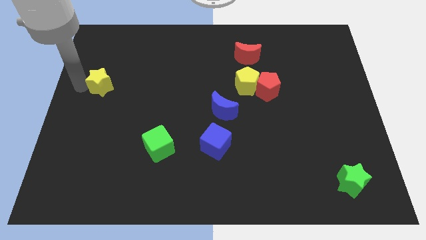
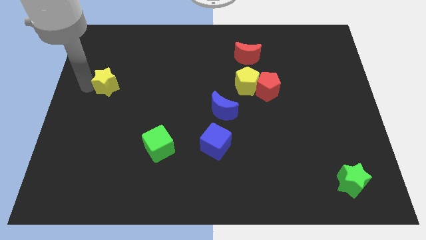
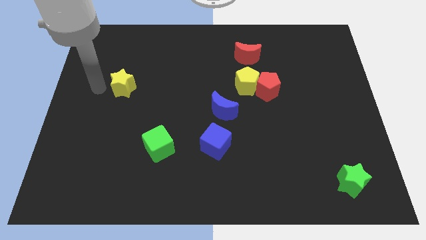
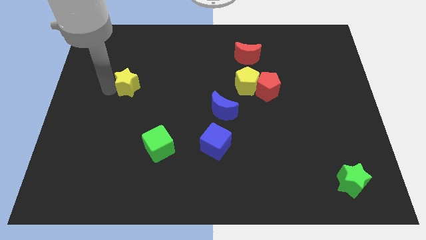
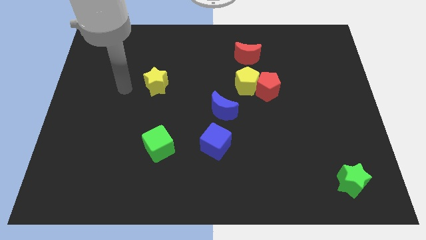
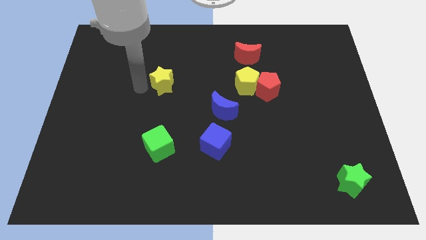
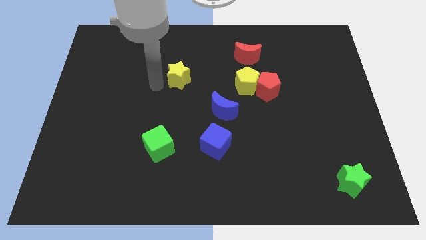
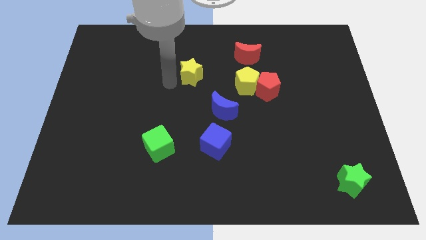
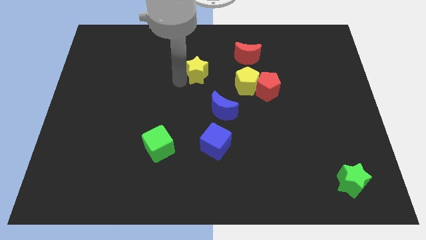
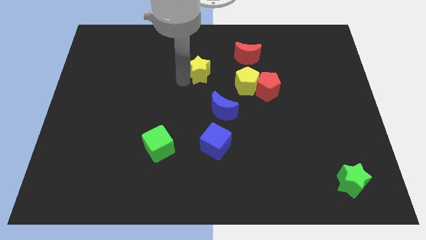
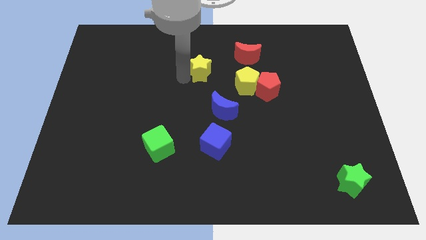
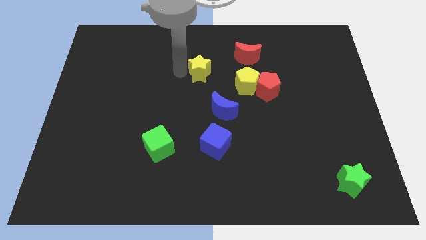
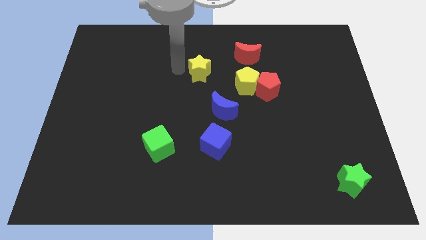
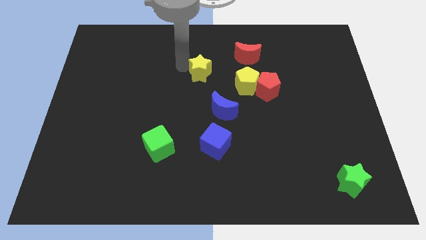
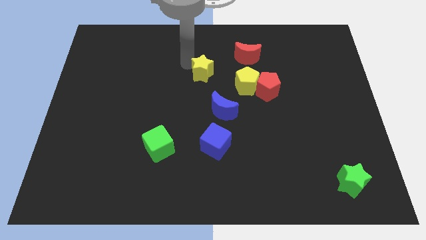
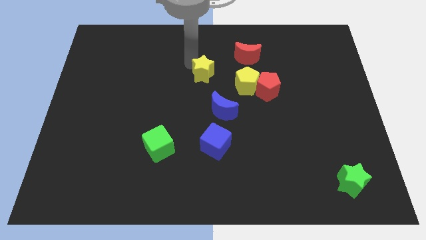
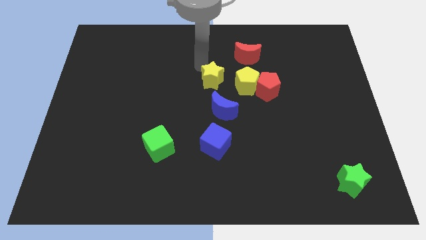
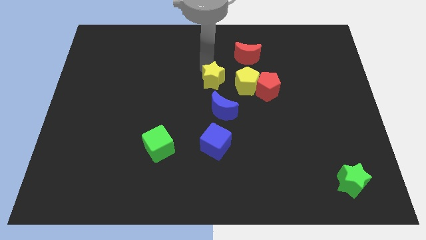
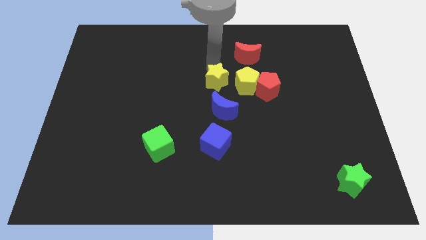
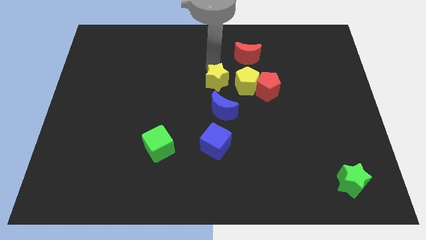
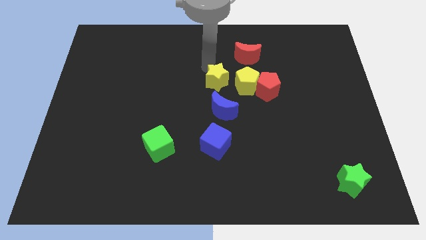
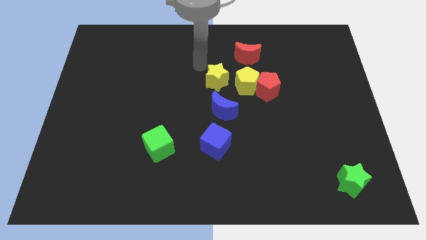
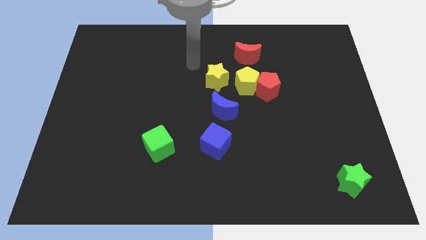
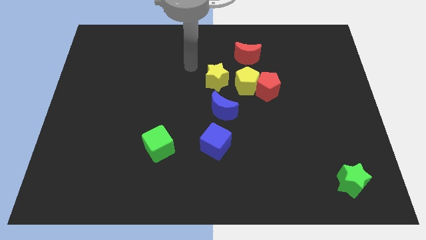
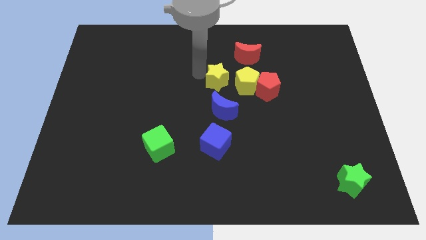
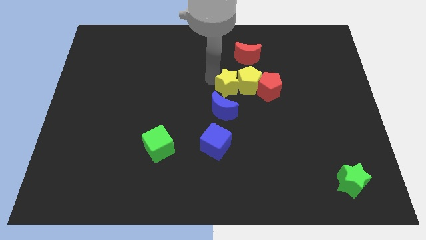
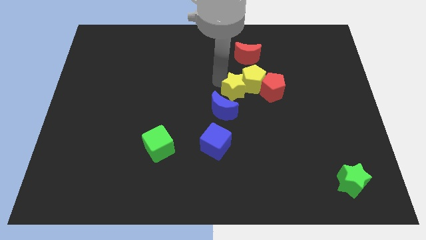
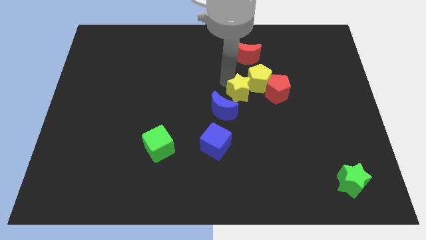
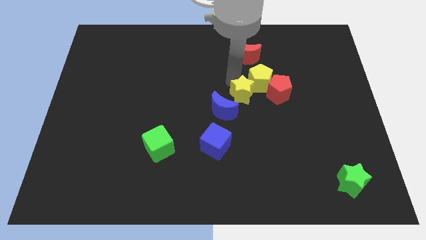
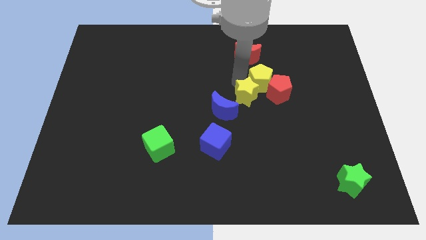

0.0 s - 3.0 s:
place the yellow star in between the yellow pentagon and blue crescent

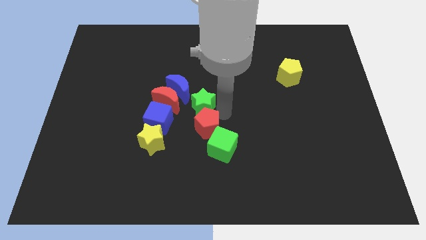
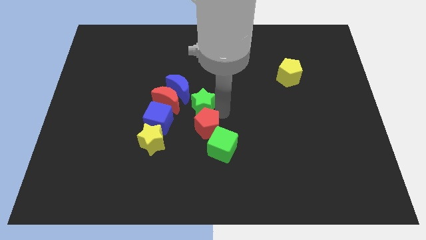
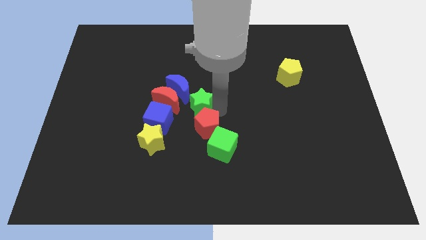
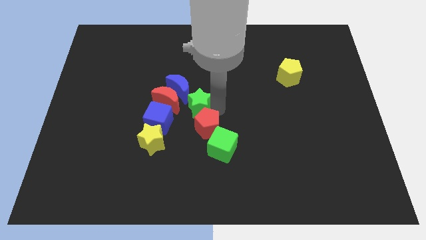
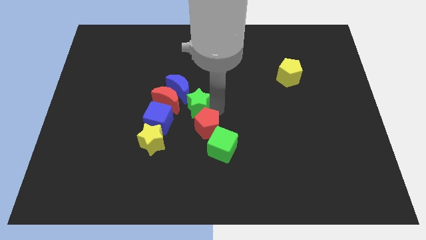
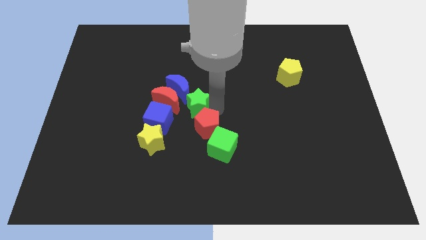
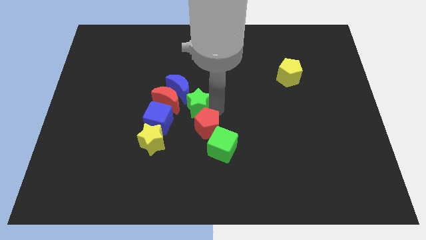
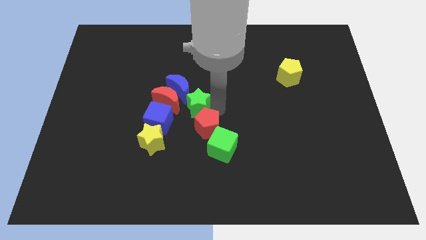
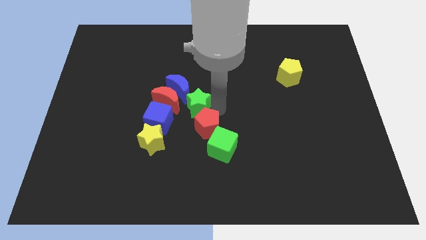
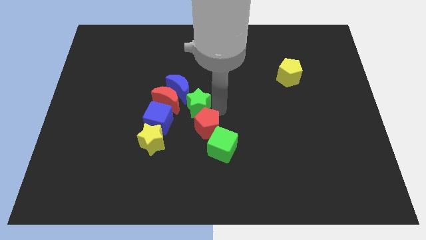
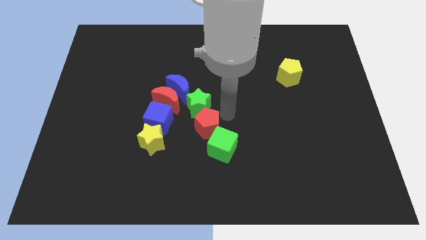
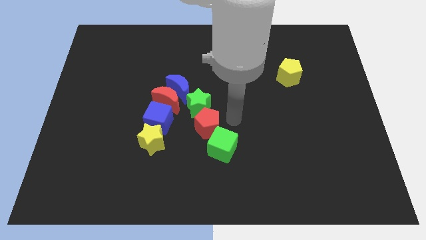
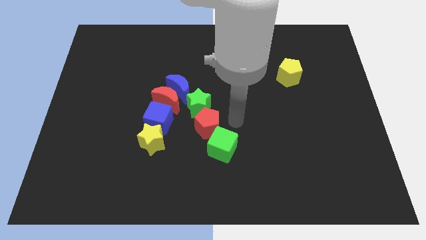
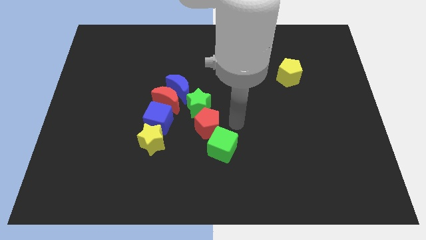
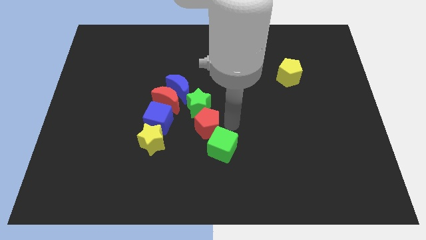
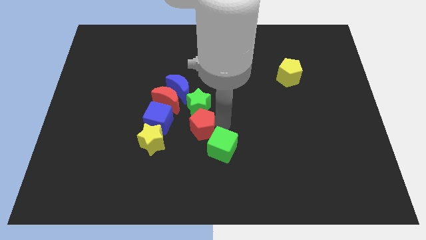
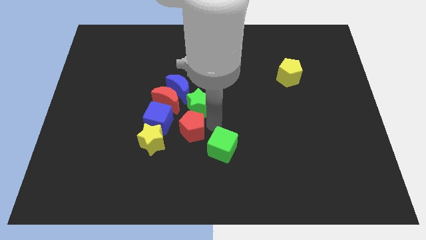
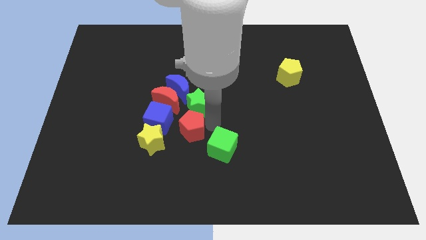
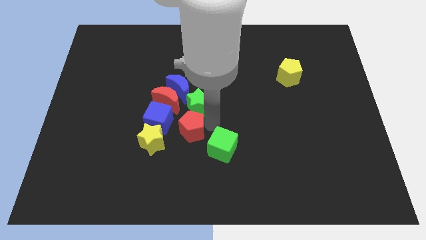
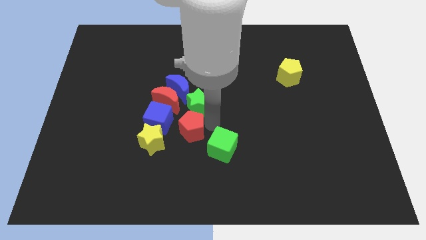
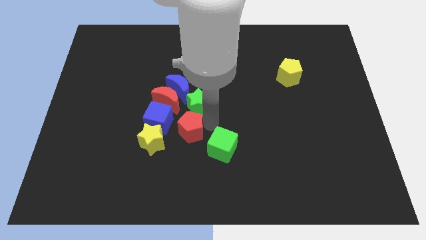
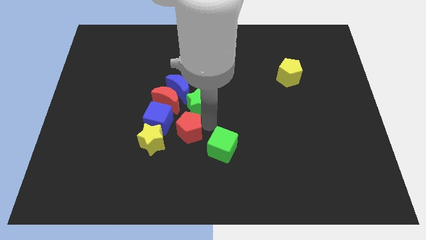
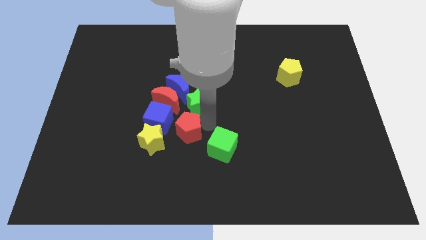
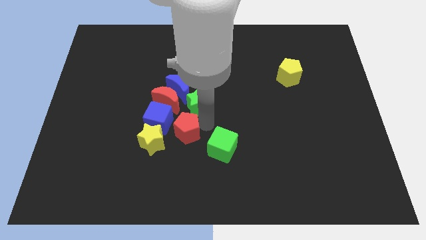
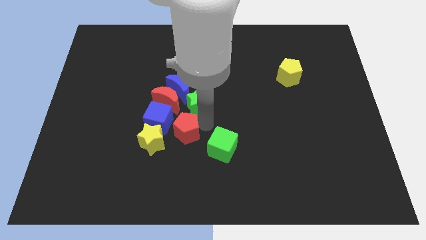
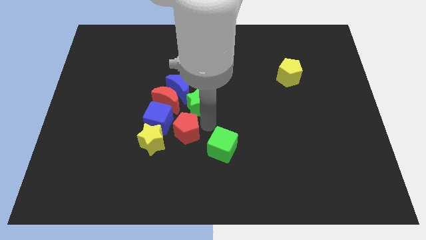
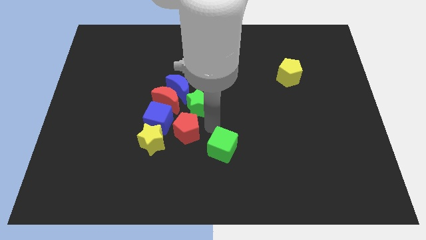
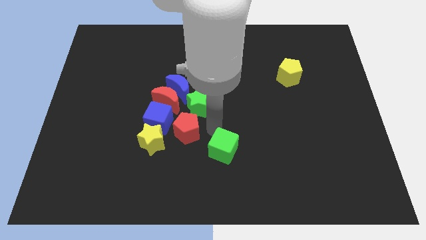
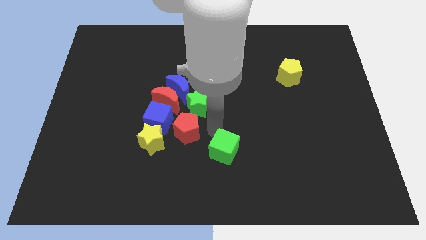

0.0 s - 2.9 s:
move the red pentagon towards the right side of the blue cube

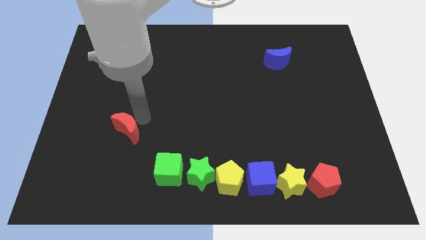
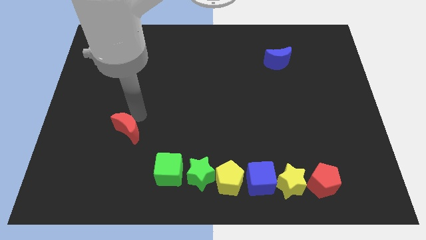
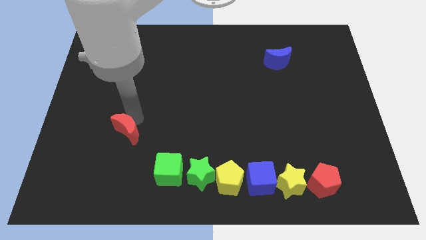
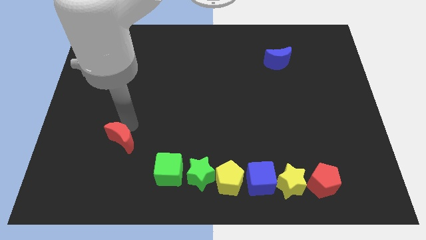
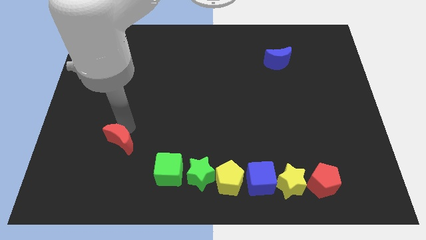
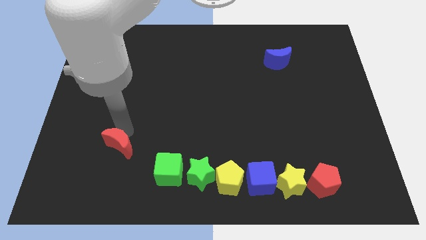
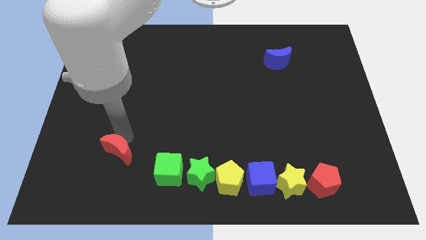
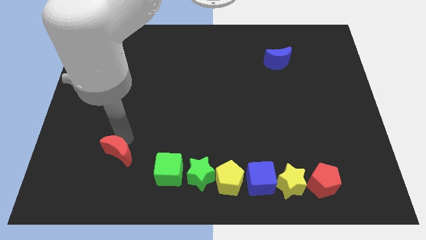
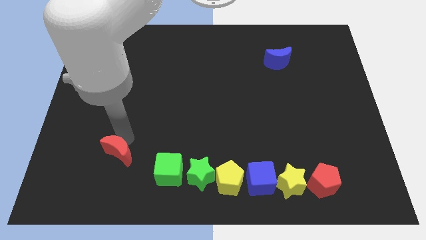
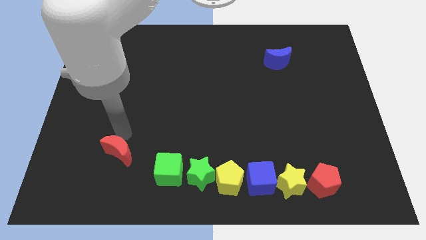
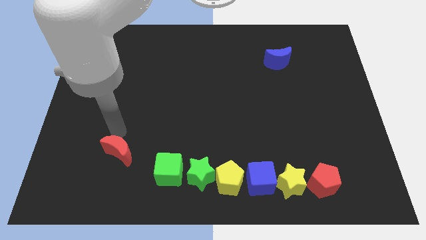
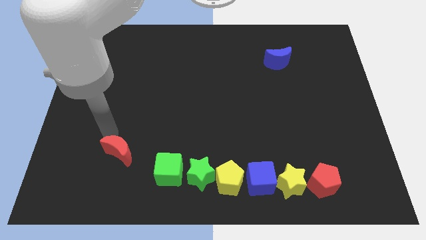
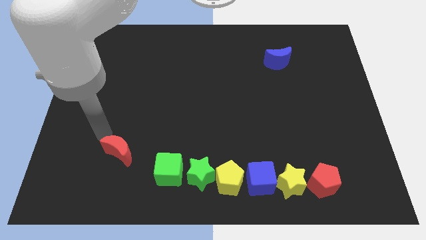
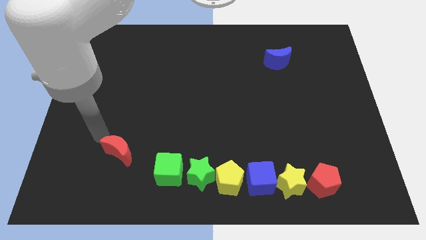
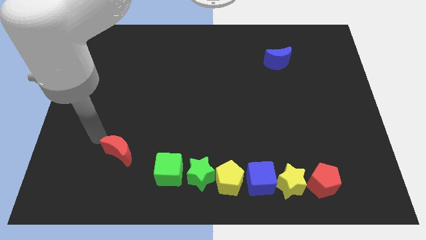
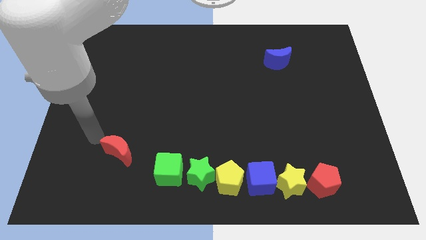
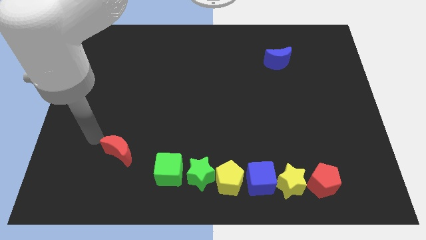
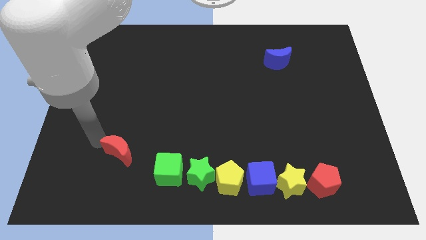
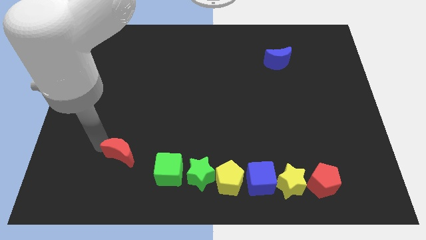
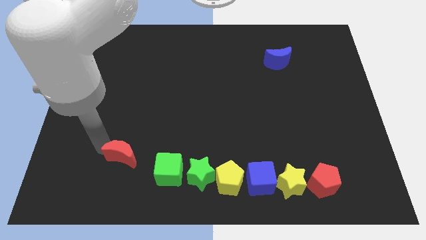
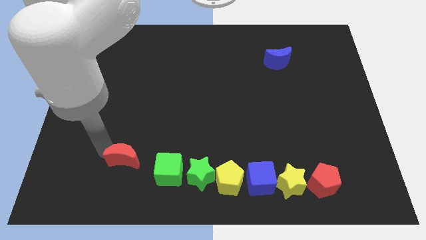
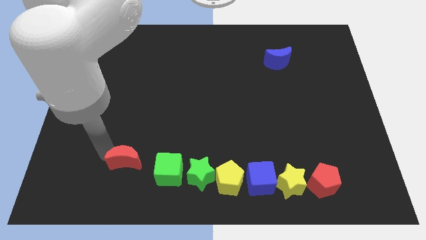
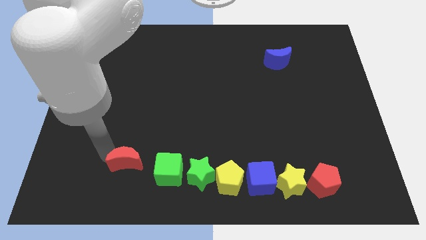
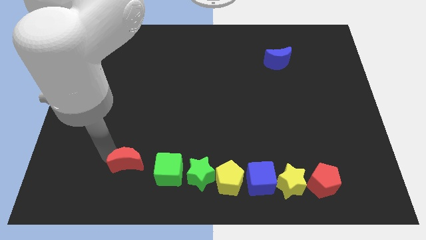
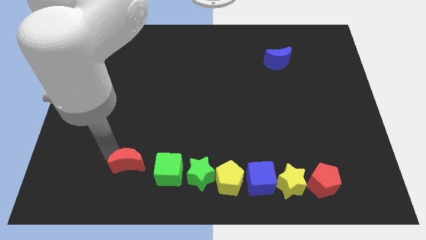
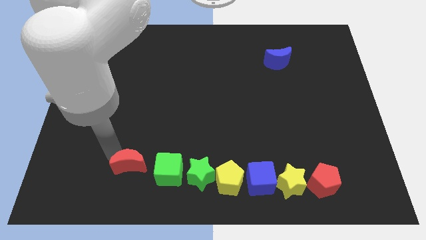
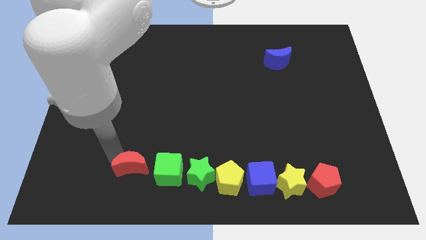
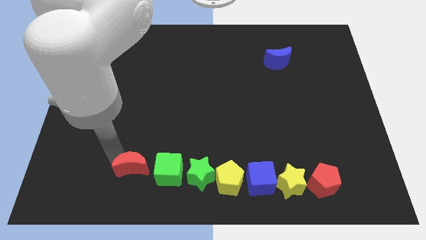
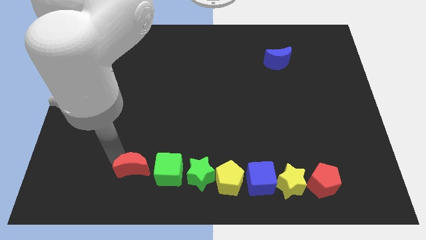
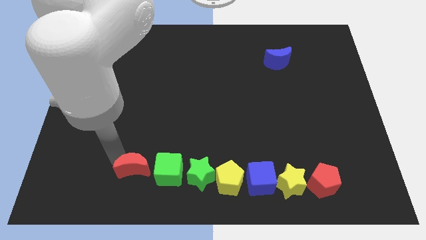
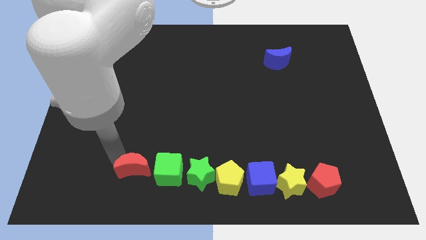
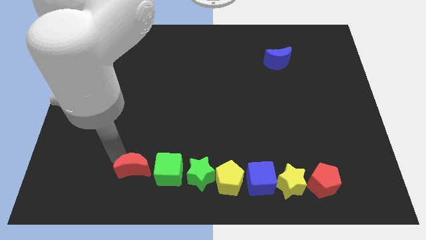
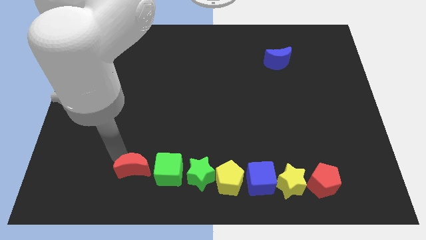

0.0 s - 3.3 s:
move the red crescent close to the green cube
